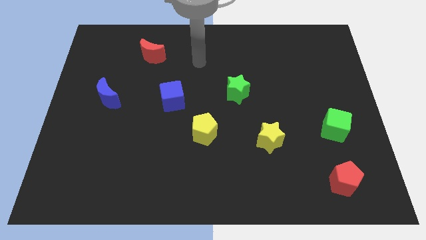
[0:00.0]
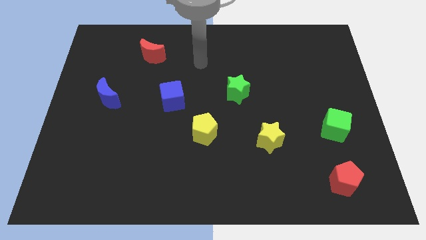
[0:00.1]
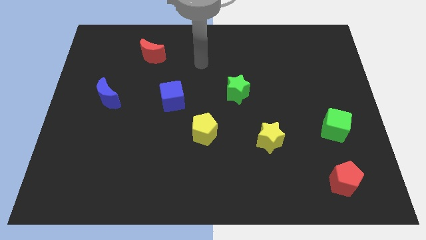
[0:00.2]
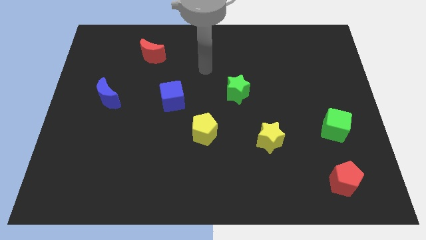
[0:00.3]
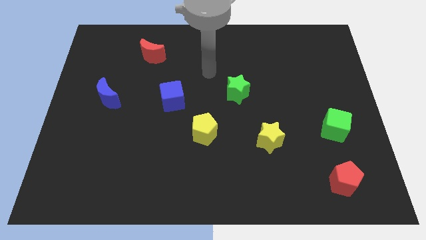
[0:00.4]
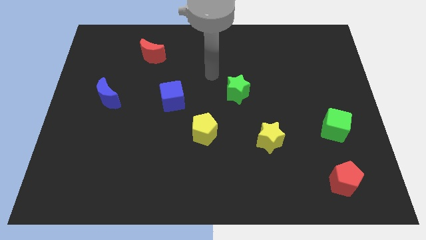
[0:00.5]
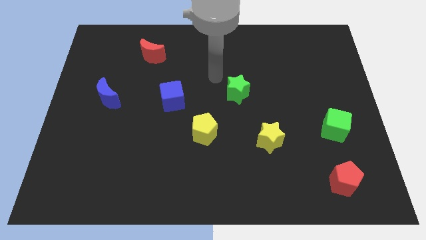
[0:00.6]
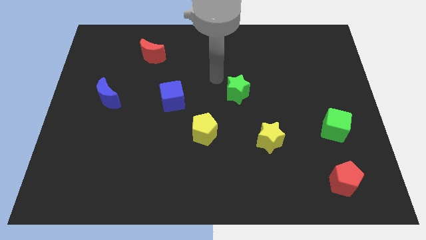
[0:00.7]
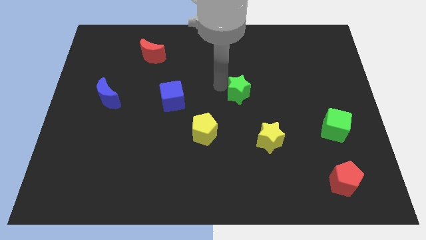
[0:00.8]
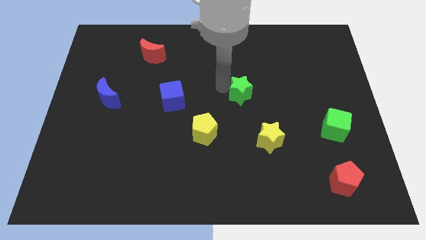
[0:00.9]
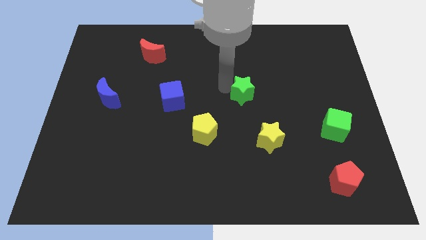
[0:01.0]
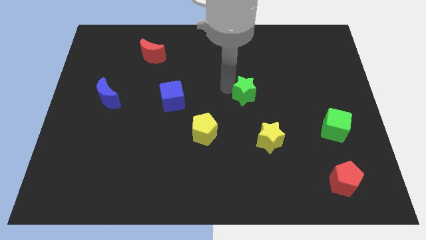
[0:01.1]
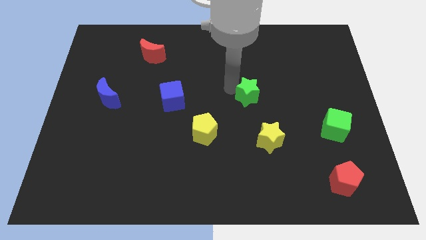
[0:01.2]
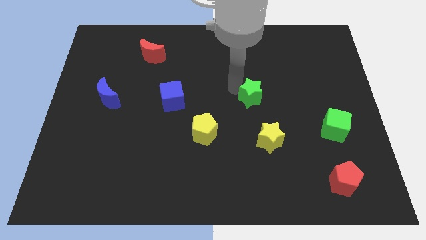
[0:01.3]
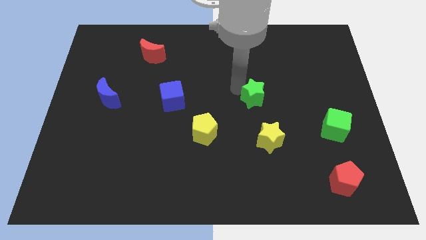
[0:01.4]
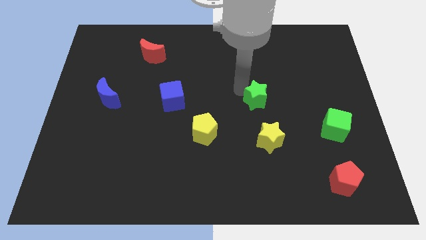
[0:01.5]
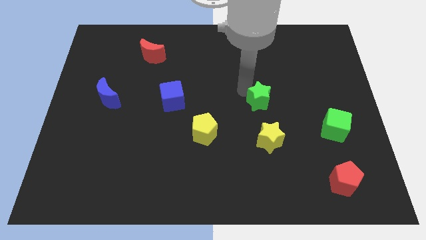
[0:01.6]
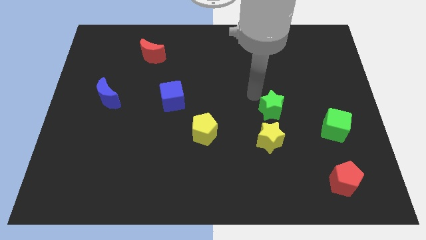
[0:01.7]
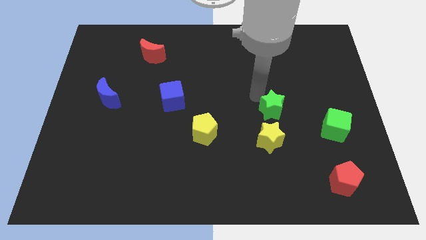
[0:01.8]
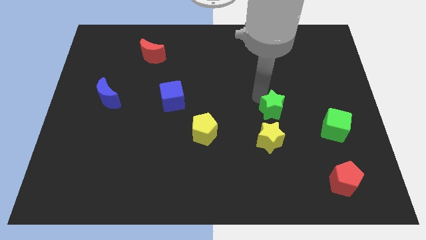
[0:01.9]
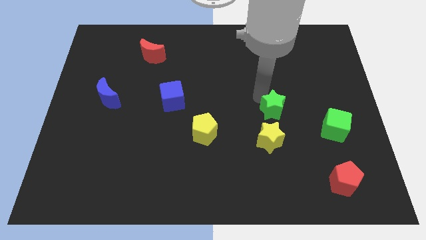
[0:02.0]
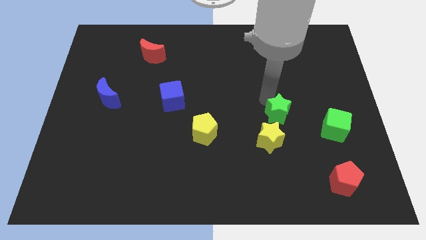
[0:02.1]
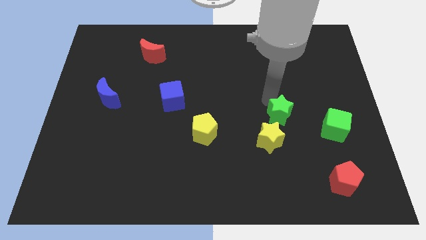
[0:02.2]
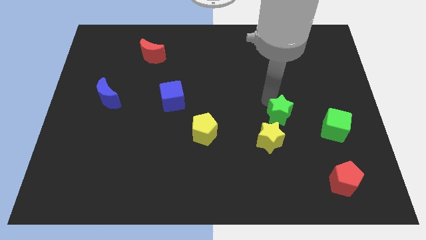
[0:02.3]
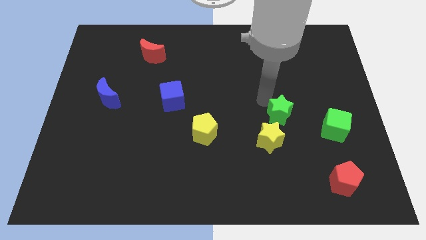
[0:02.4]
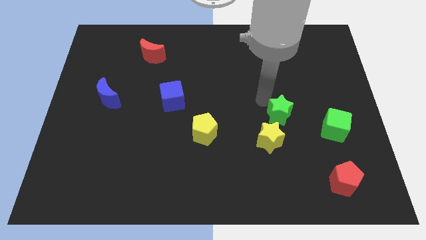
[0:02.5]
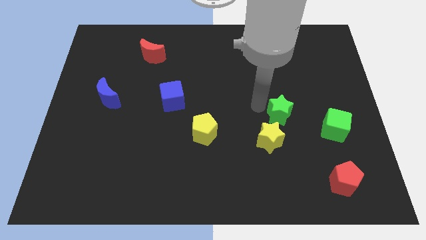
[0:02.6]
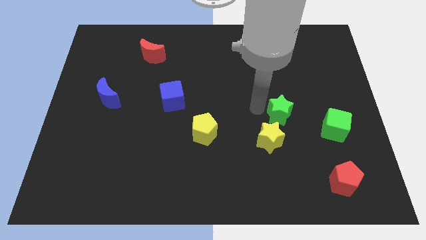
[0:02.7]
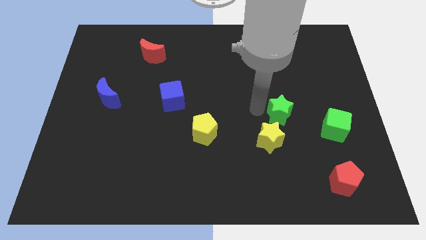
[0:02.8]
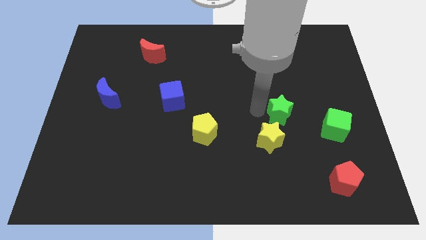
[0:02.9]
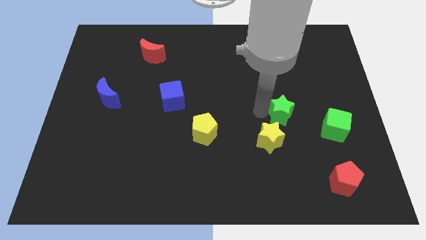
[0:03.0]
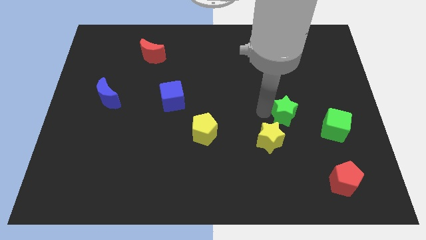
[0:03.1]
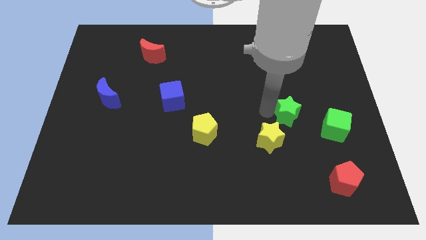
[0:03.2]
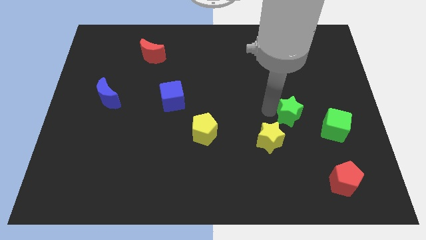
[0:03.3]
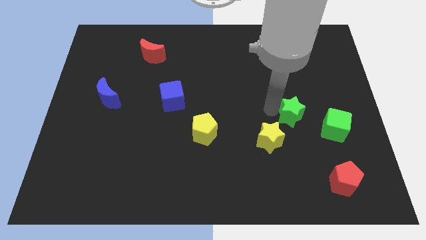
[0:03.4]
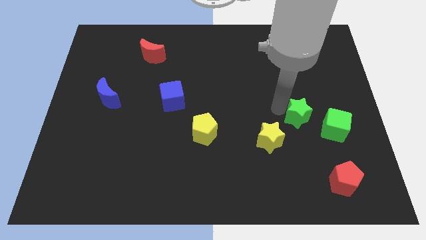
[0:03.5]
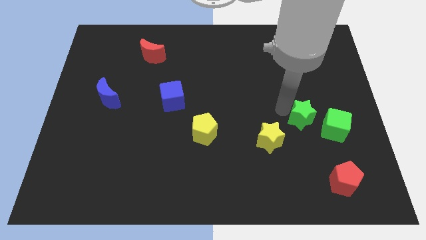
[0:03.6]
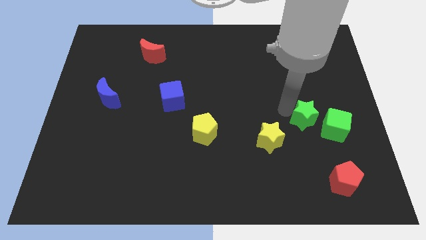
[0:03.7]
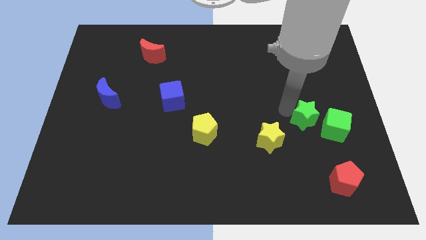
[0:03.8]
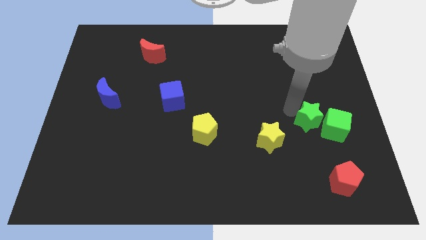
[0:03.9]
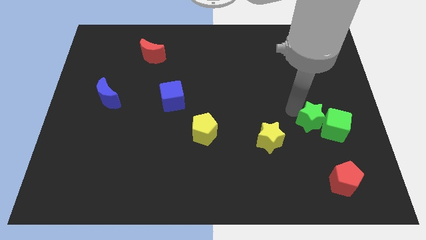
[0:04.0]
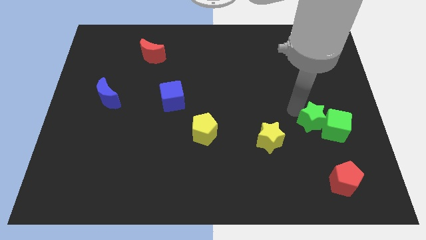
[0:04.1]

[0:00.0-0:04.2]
push the green star next to the green cube

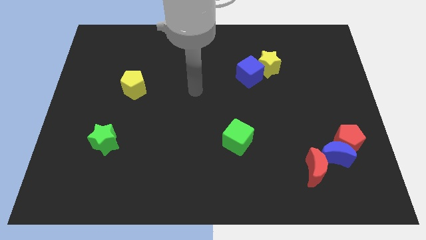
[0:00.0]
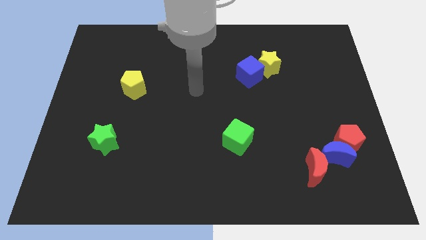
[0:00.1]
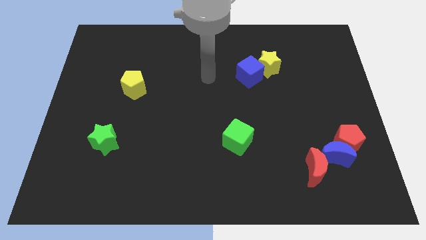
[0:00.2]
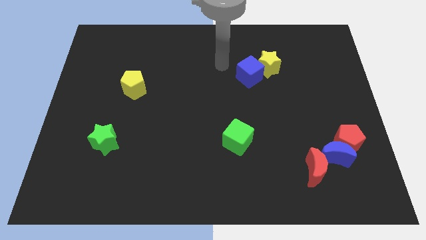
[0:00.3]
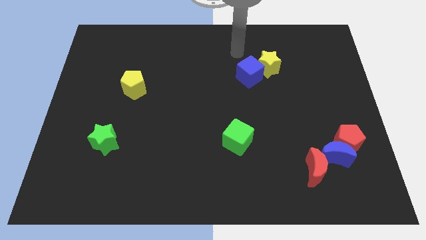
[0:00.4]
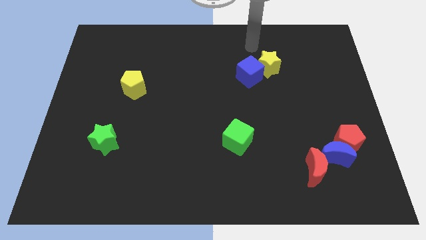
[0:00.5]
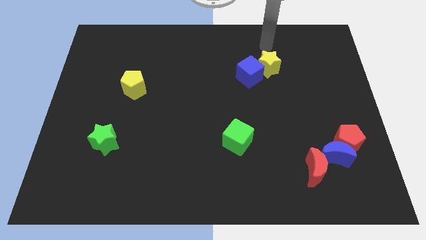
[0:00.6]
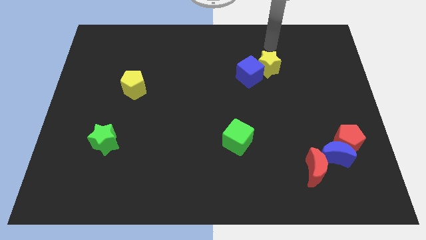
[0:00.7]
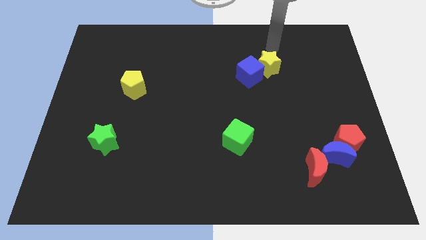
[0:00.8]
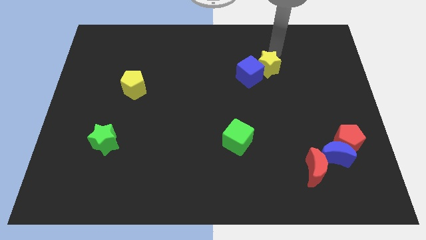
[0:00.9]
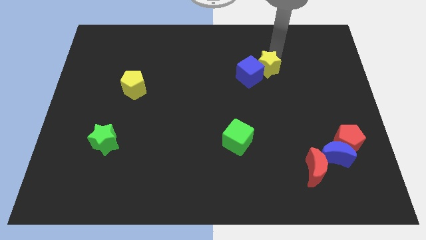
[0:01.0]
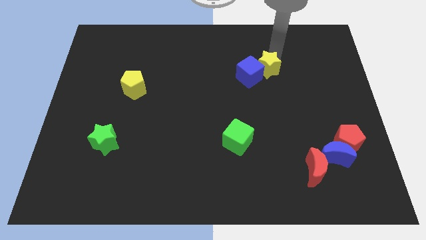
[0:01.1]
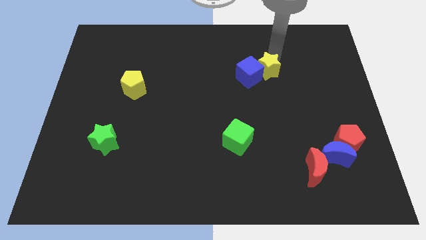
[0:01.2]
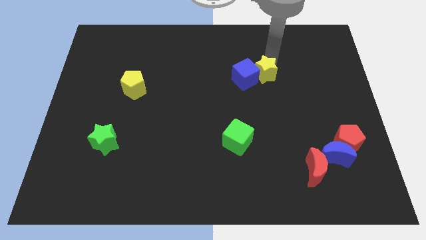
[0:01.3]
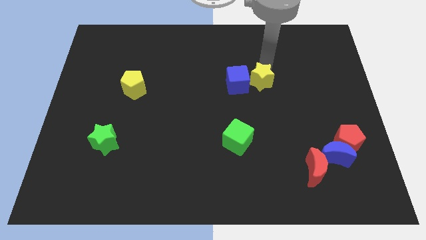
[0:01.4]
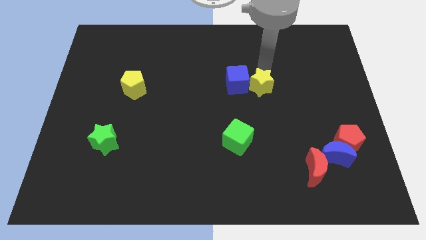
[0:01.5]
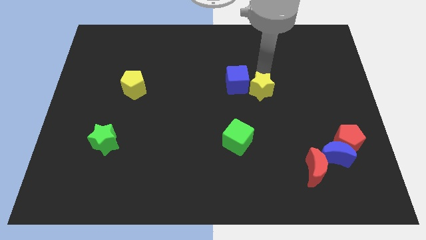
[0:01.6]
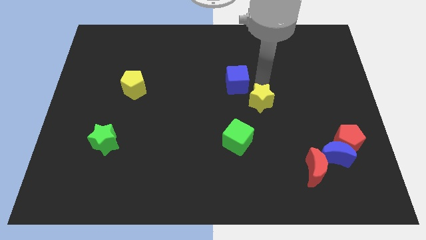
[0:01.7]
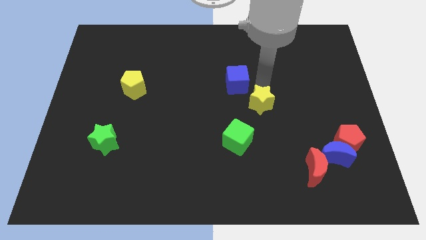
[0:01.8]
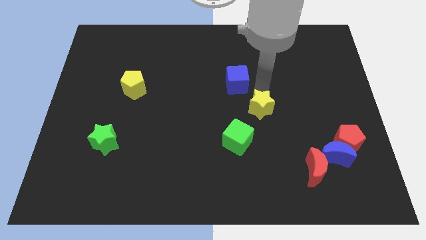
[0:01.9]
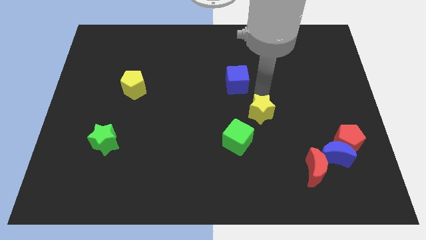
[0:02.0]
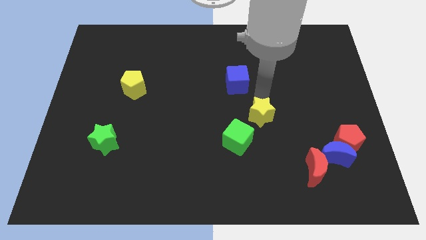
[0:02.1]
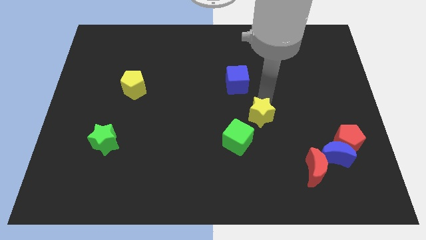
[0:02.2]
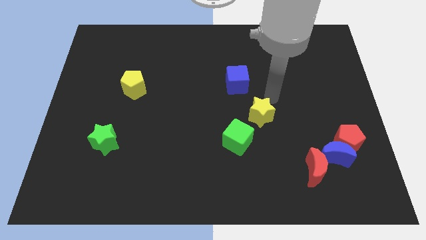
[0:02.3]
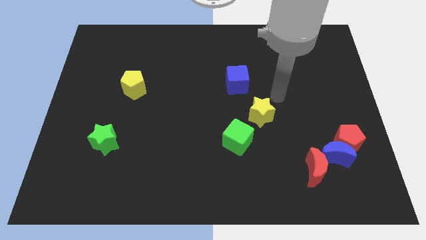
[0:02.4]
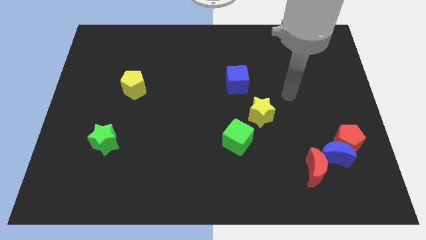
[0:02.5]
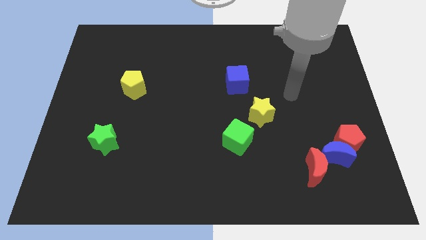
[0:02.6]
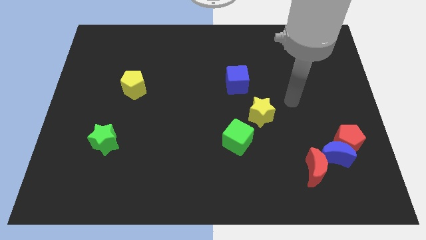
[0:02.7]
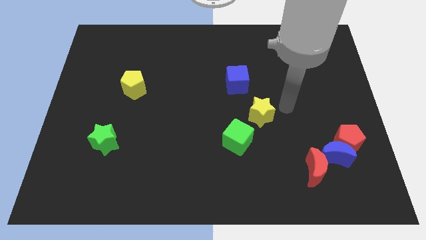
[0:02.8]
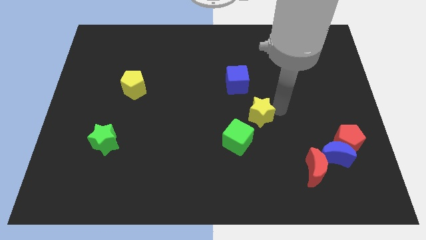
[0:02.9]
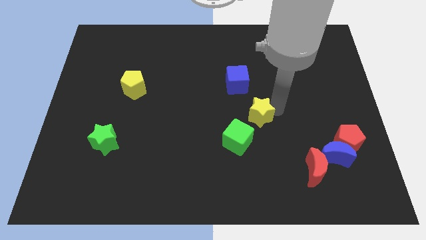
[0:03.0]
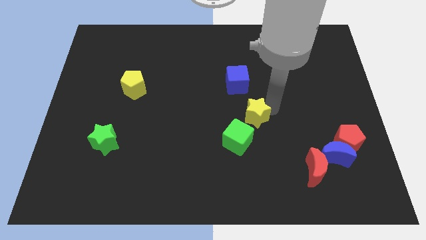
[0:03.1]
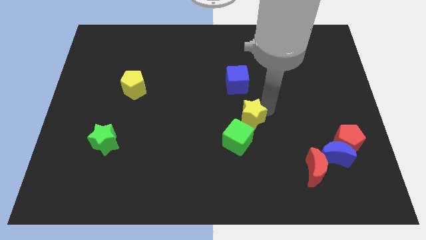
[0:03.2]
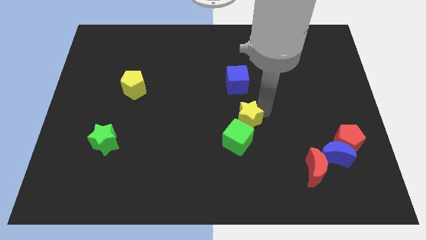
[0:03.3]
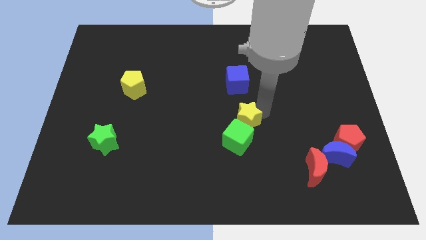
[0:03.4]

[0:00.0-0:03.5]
move the yellow star to the green cube

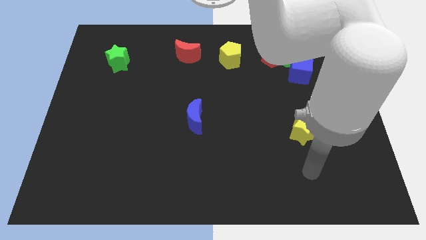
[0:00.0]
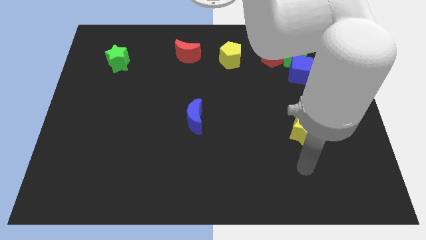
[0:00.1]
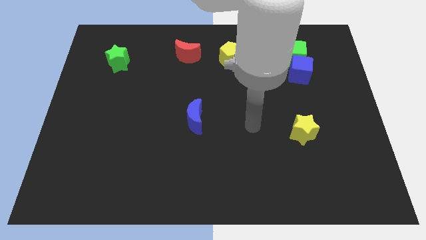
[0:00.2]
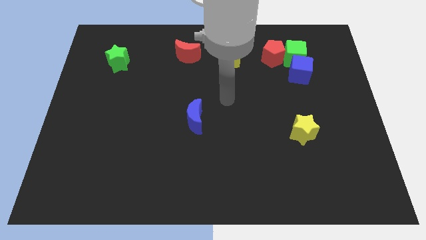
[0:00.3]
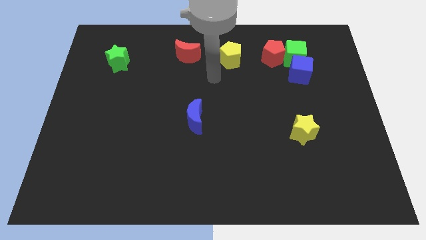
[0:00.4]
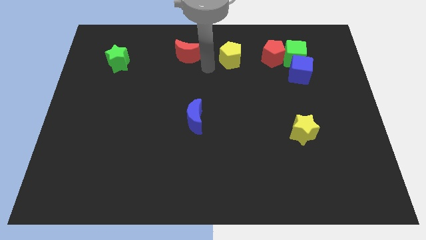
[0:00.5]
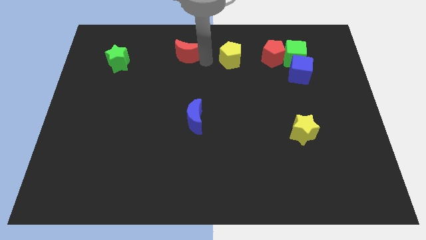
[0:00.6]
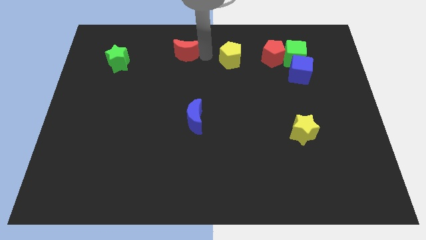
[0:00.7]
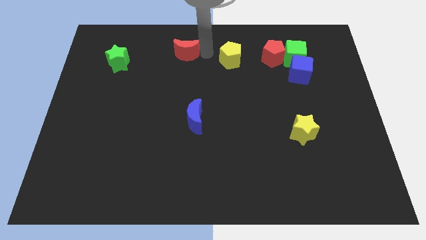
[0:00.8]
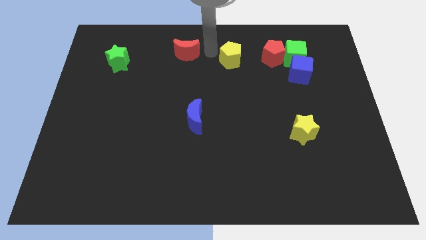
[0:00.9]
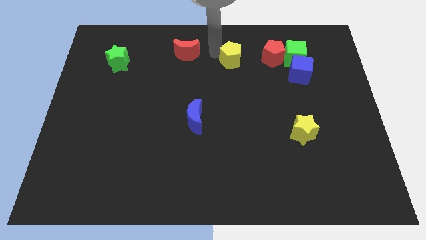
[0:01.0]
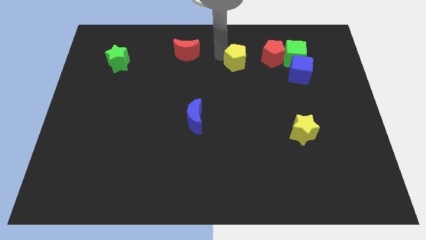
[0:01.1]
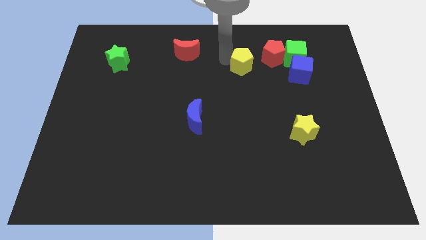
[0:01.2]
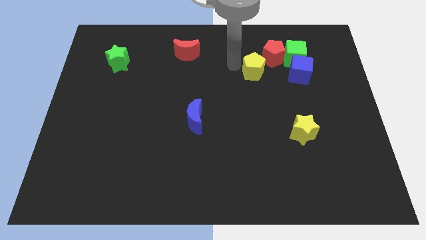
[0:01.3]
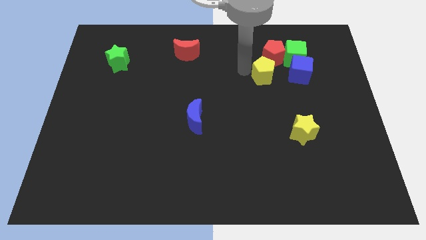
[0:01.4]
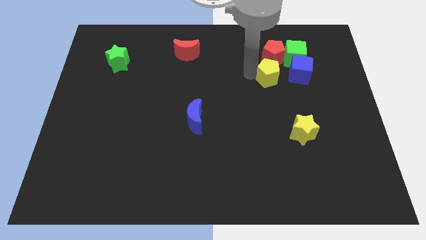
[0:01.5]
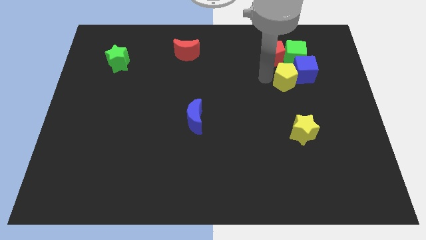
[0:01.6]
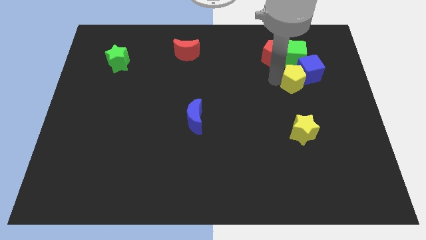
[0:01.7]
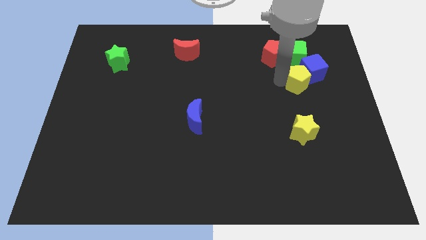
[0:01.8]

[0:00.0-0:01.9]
push the yellow pentagon towards the blue cube
